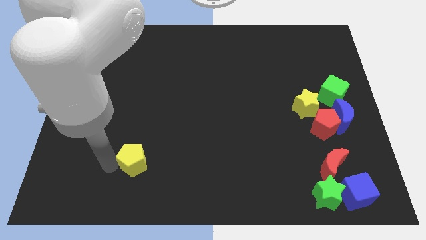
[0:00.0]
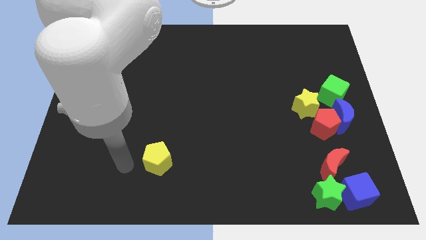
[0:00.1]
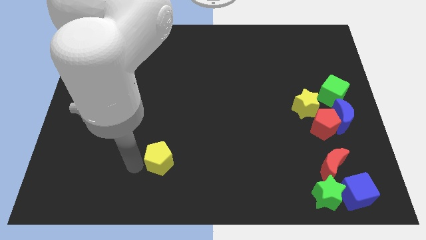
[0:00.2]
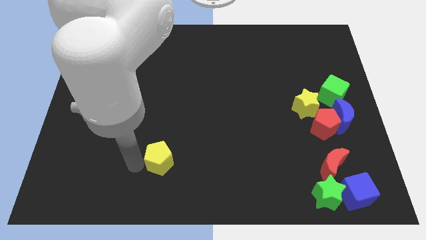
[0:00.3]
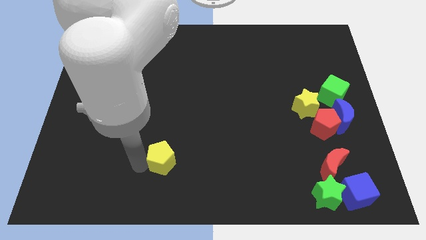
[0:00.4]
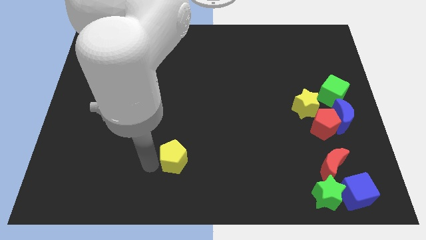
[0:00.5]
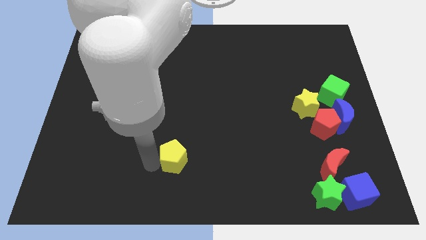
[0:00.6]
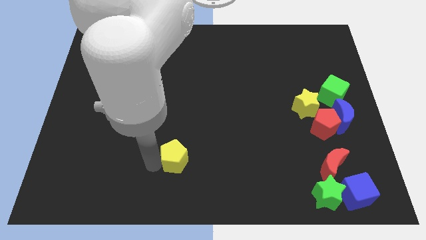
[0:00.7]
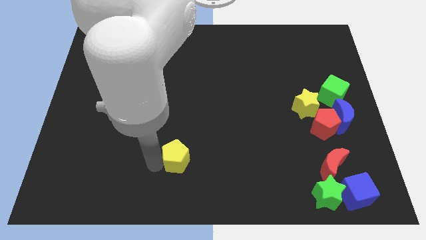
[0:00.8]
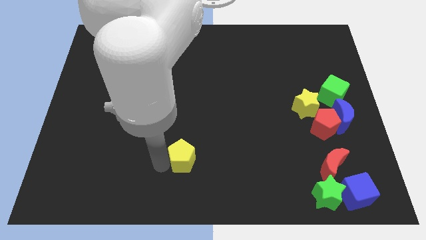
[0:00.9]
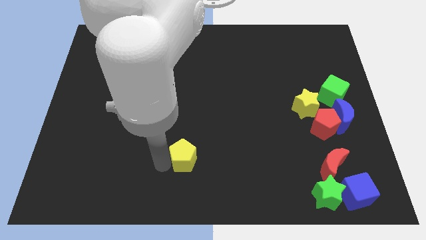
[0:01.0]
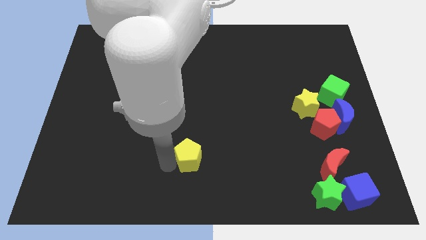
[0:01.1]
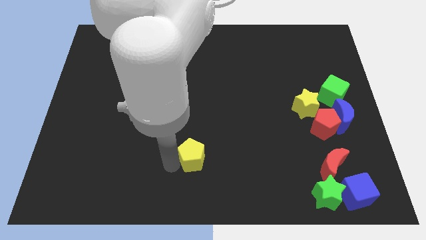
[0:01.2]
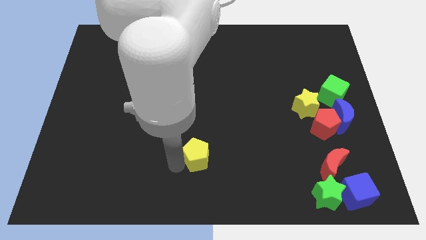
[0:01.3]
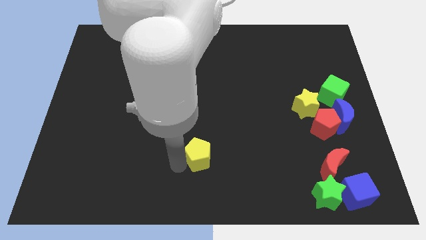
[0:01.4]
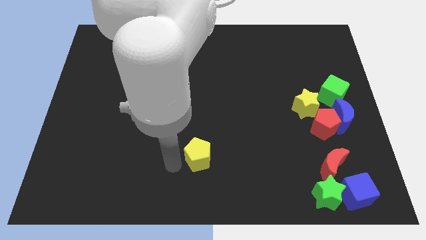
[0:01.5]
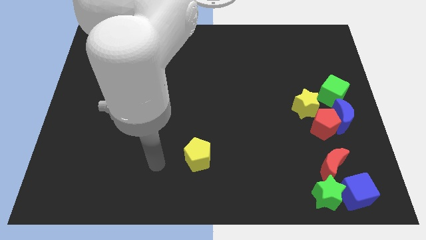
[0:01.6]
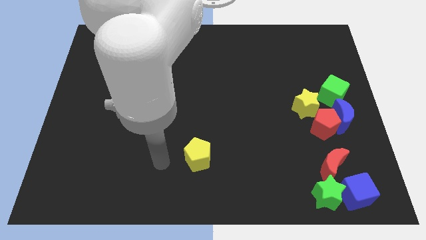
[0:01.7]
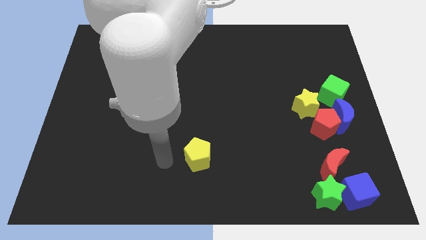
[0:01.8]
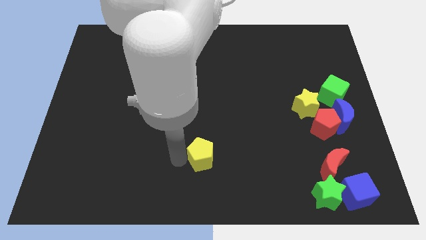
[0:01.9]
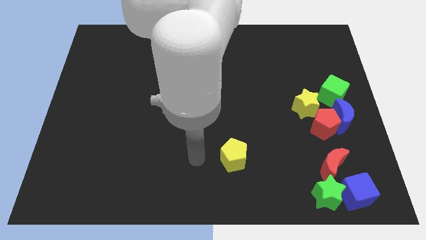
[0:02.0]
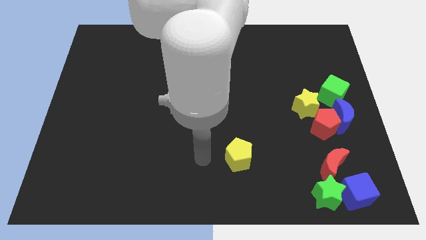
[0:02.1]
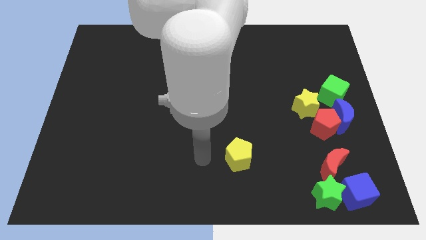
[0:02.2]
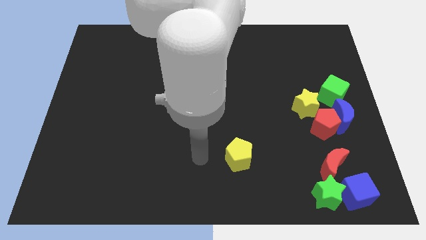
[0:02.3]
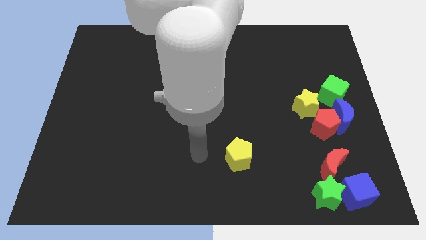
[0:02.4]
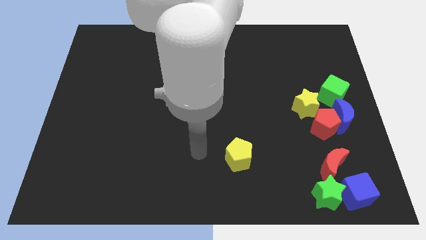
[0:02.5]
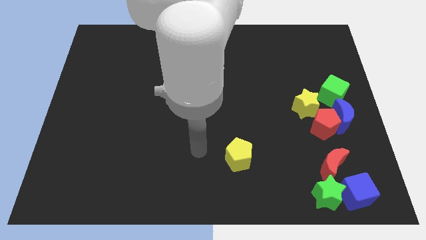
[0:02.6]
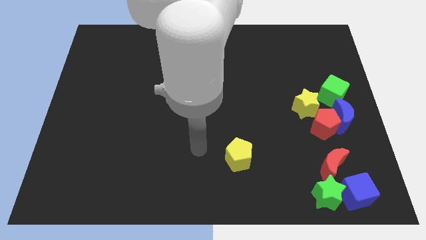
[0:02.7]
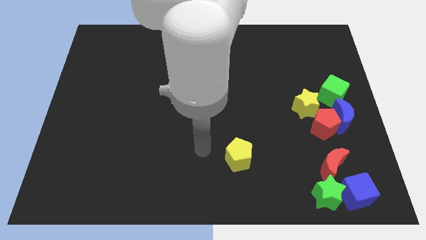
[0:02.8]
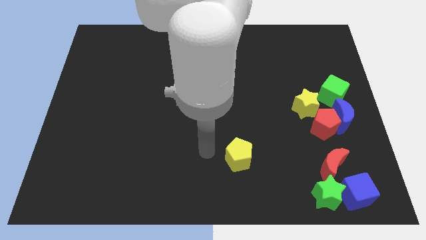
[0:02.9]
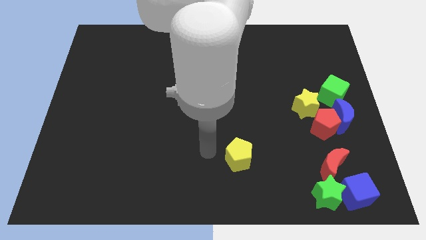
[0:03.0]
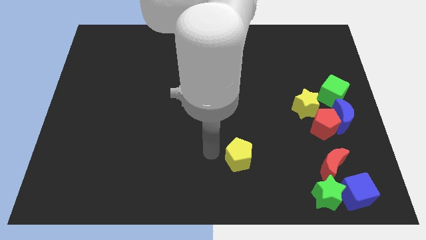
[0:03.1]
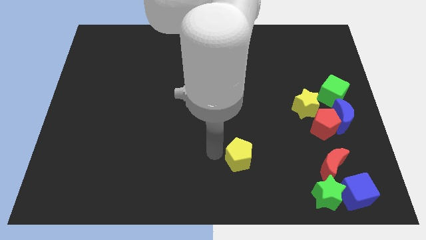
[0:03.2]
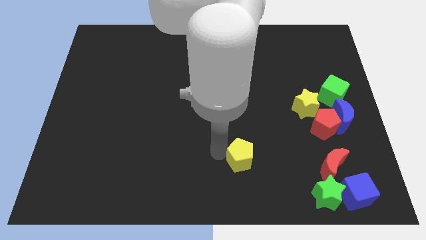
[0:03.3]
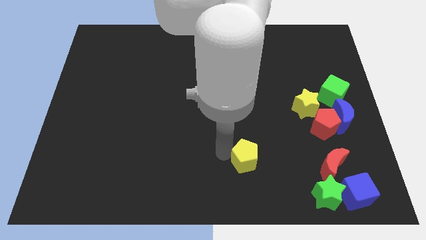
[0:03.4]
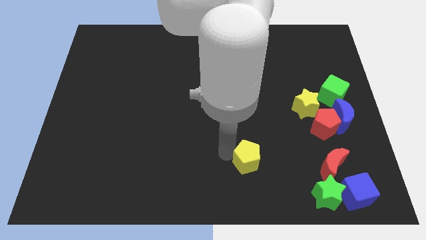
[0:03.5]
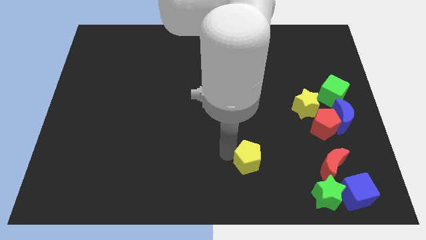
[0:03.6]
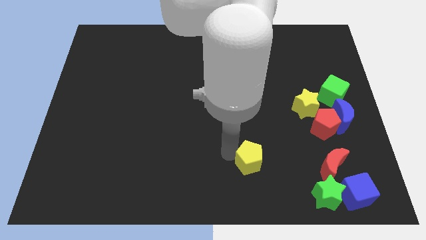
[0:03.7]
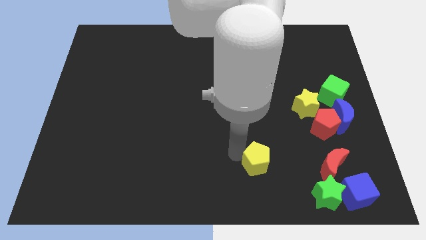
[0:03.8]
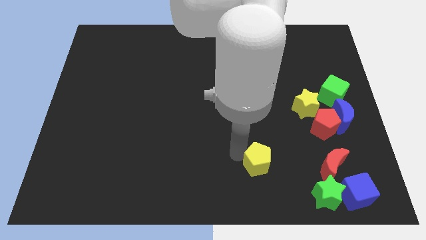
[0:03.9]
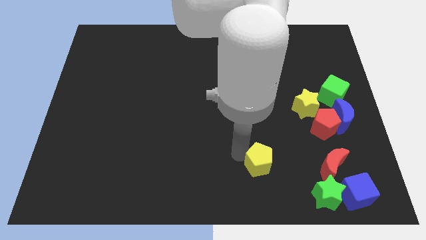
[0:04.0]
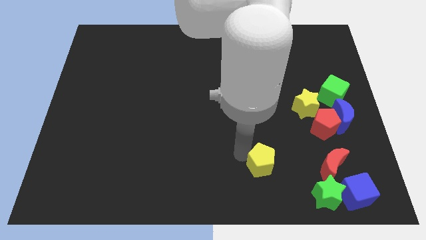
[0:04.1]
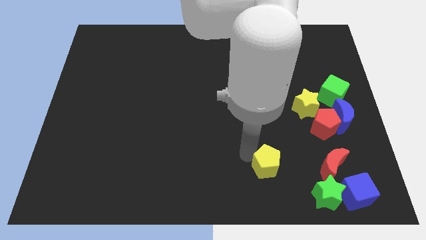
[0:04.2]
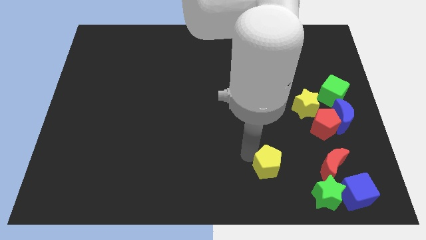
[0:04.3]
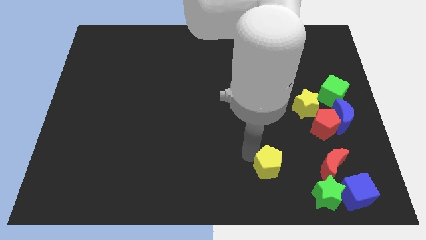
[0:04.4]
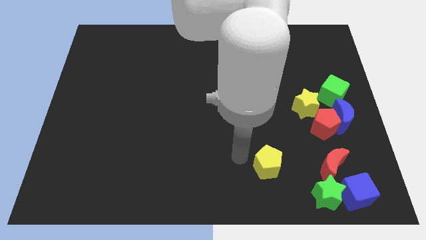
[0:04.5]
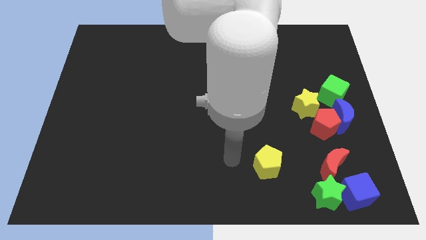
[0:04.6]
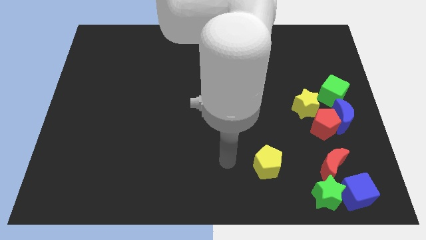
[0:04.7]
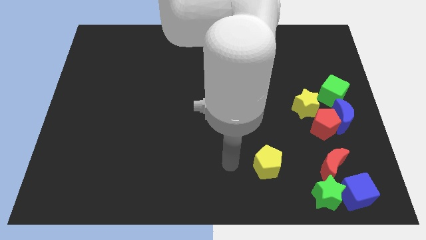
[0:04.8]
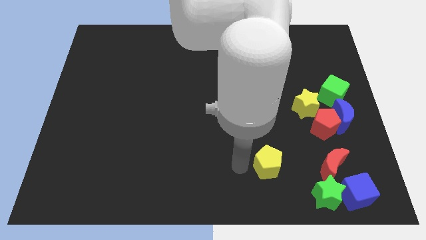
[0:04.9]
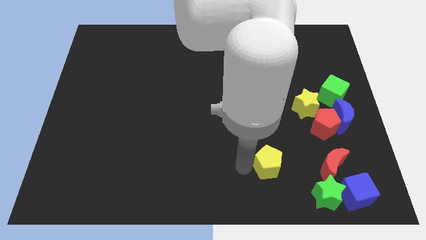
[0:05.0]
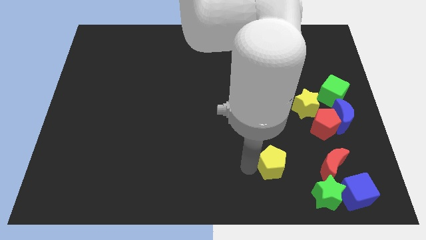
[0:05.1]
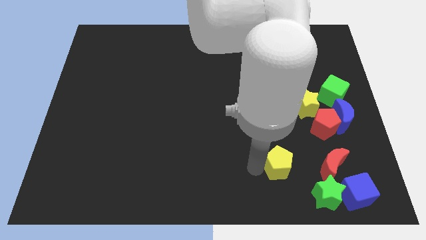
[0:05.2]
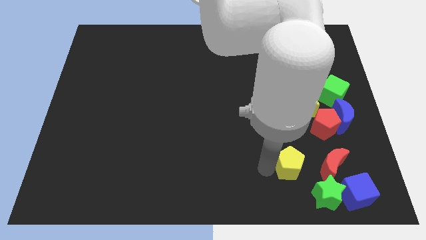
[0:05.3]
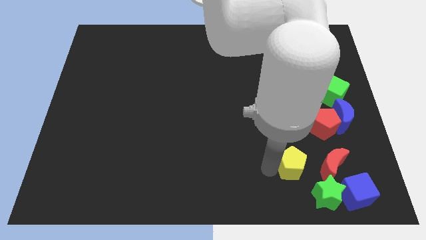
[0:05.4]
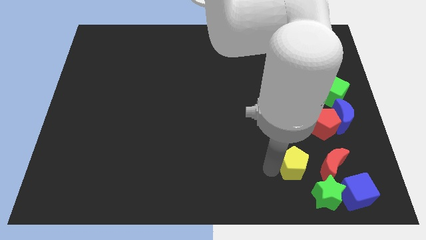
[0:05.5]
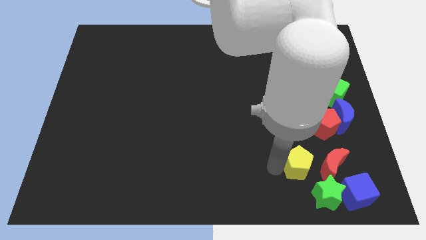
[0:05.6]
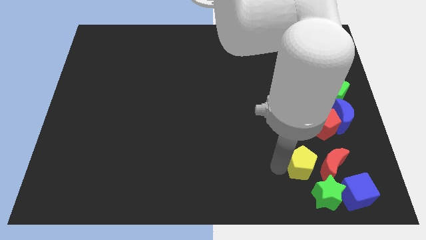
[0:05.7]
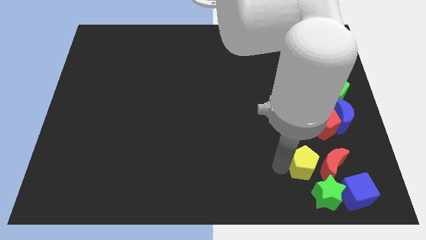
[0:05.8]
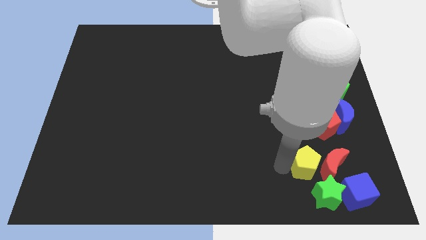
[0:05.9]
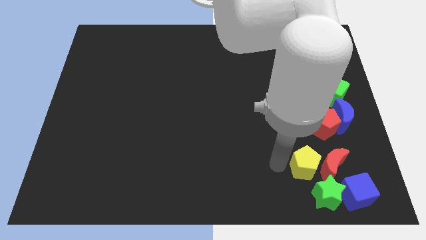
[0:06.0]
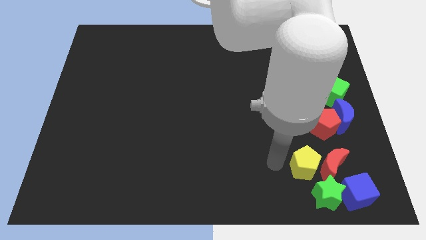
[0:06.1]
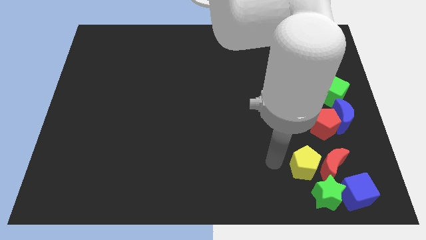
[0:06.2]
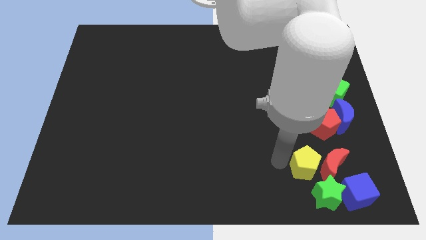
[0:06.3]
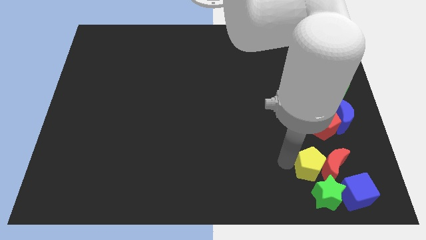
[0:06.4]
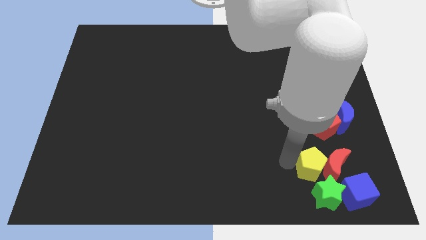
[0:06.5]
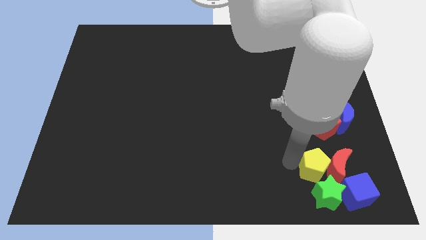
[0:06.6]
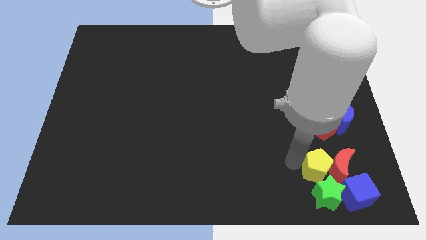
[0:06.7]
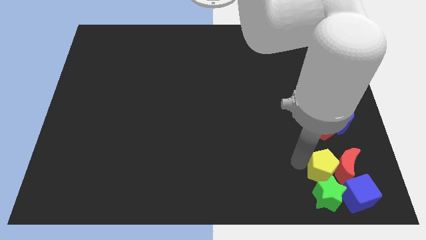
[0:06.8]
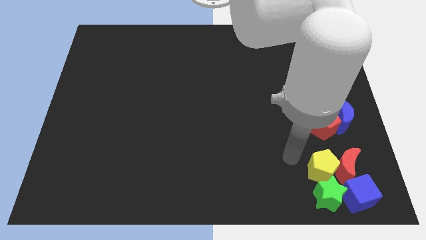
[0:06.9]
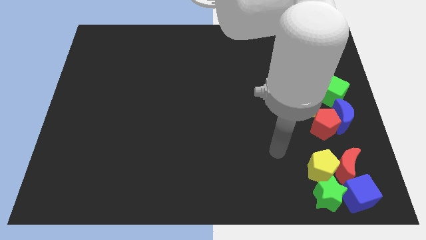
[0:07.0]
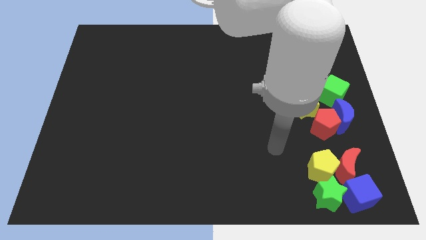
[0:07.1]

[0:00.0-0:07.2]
push yellow pentagon into group of blocks

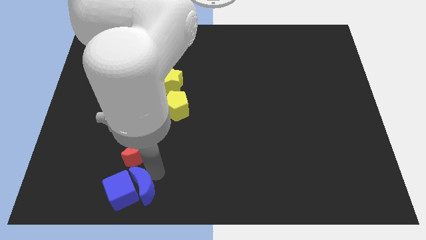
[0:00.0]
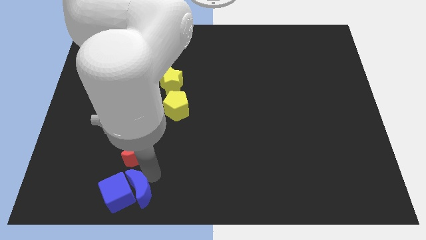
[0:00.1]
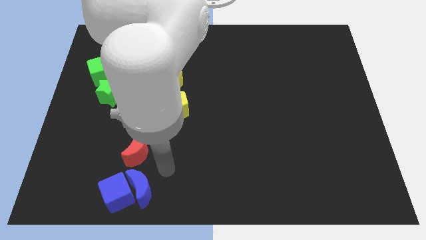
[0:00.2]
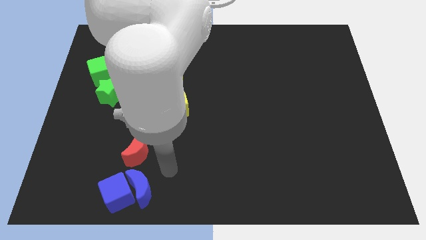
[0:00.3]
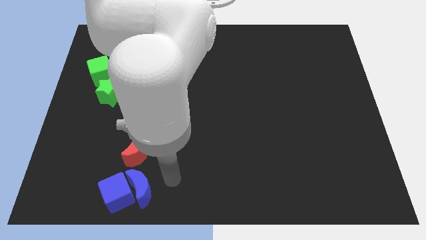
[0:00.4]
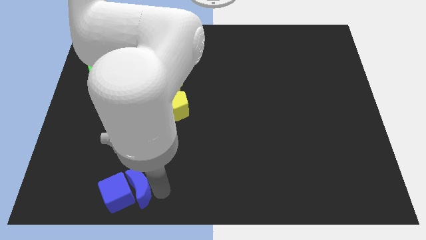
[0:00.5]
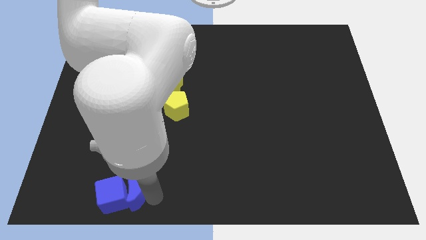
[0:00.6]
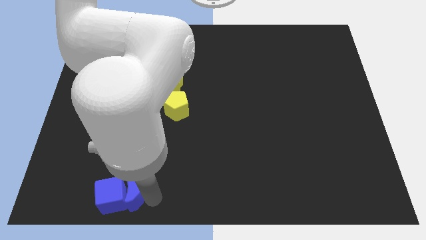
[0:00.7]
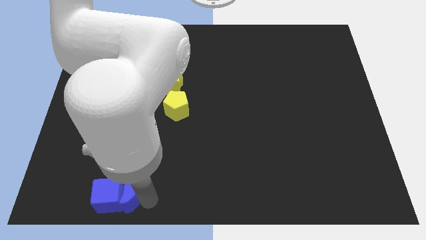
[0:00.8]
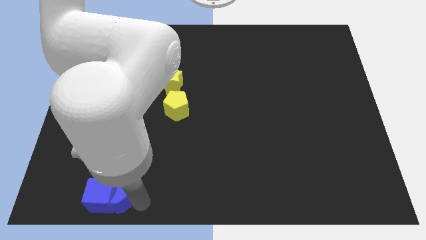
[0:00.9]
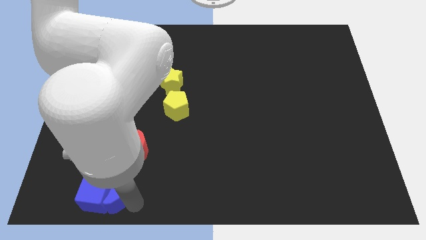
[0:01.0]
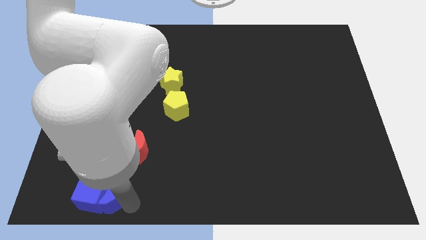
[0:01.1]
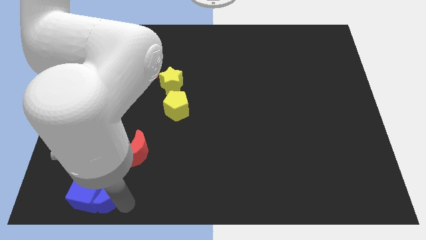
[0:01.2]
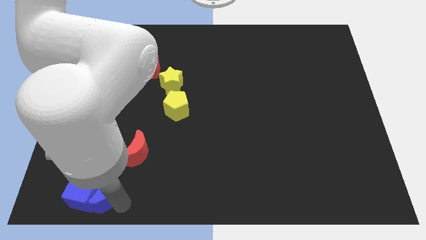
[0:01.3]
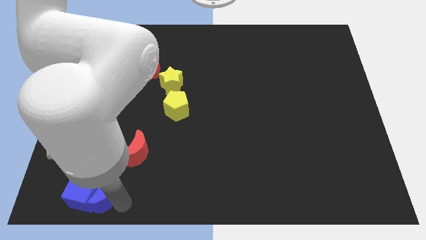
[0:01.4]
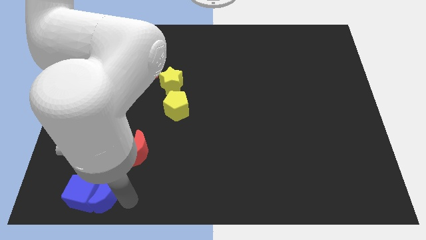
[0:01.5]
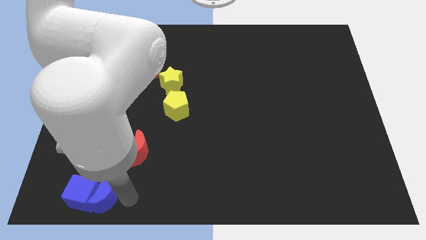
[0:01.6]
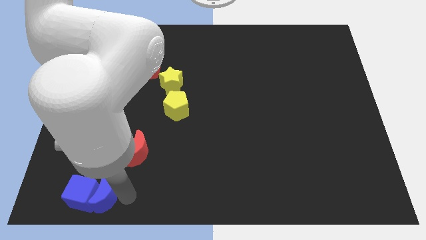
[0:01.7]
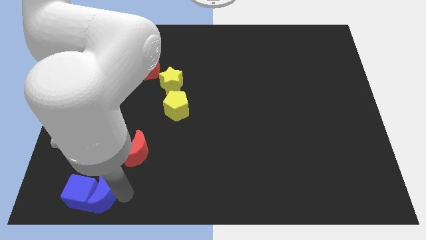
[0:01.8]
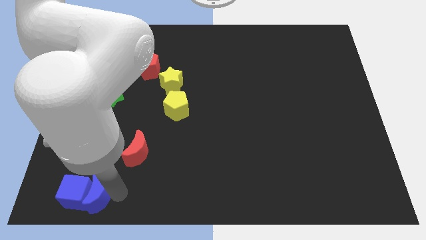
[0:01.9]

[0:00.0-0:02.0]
drag both the blue cube and blue moon together to the left side of the board

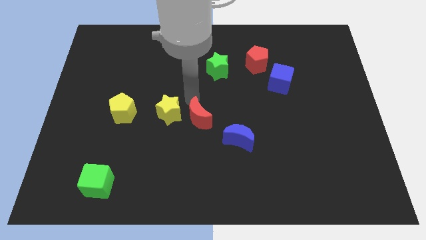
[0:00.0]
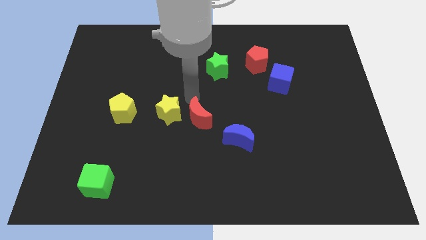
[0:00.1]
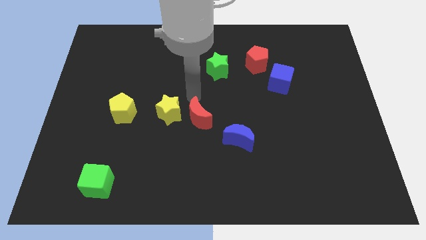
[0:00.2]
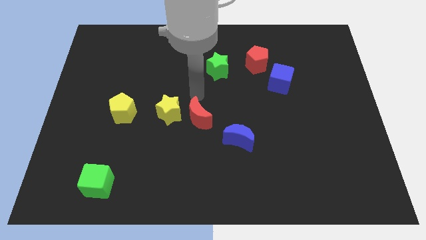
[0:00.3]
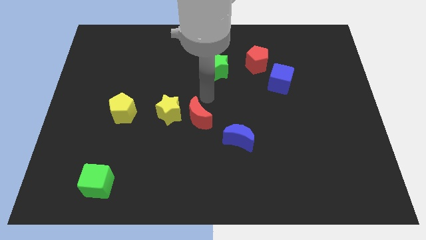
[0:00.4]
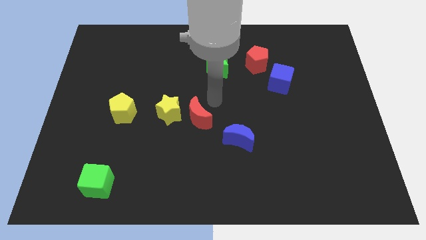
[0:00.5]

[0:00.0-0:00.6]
tap red moon slightly
